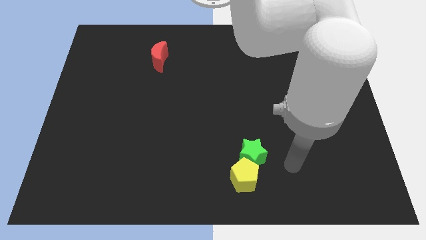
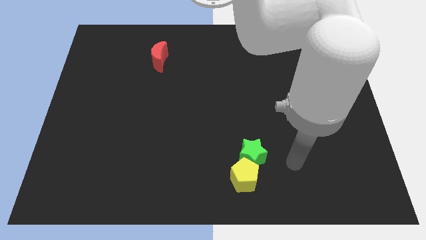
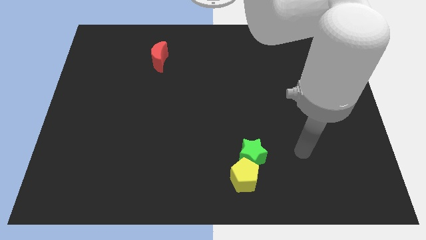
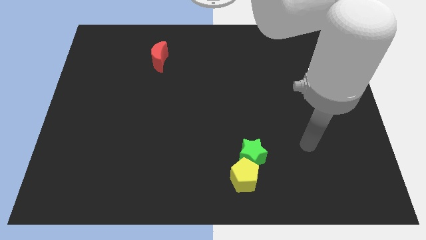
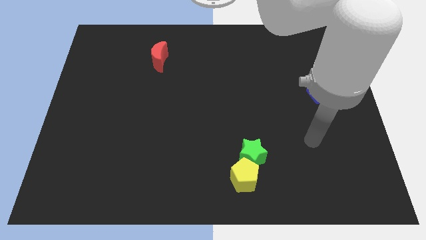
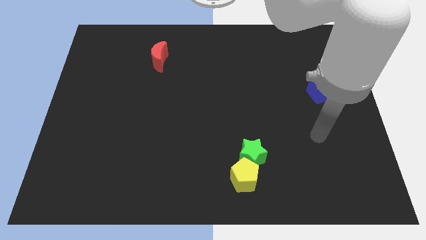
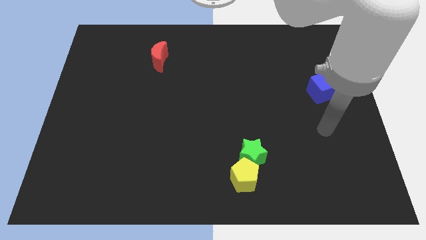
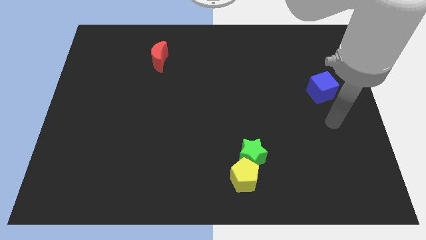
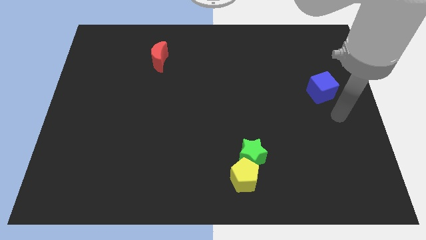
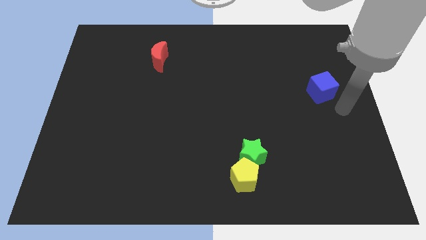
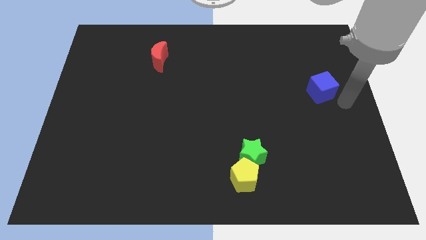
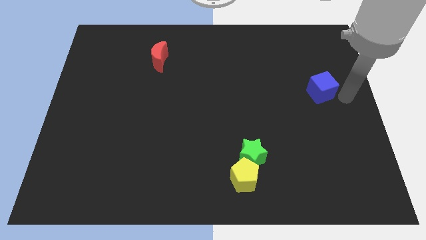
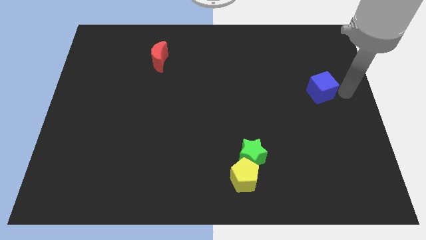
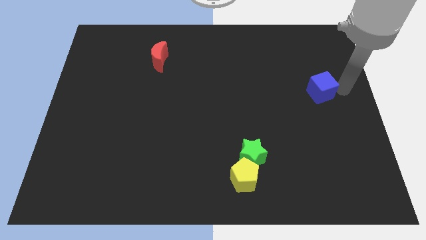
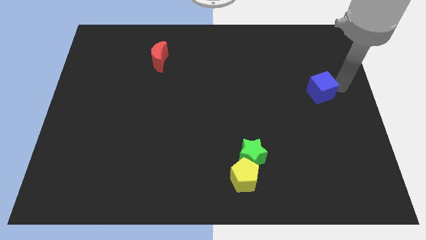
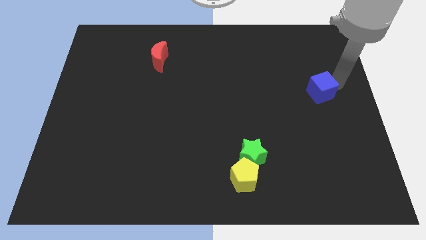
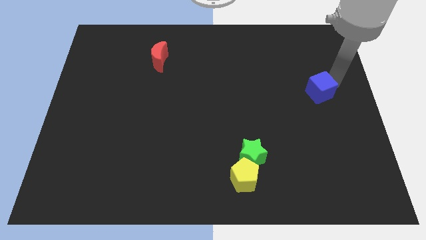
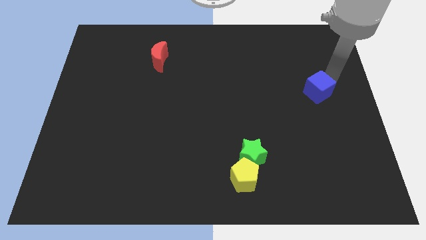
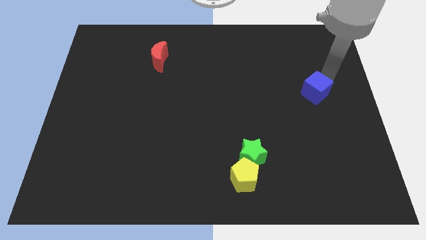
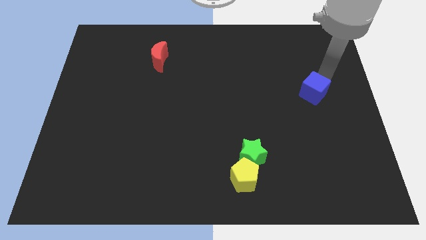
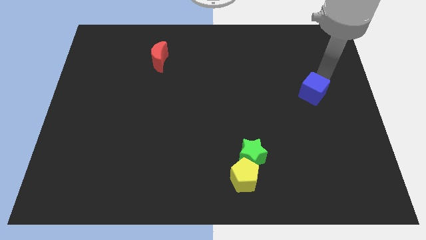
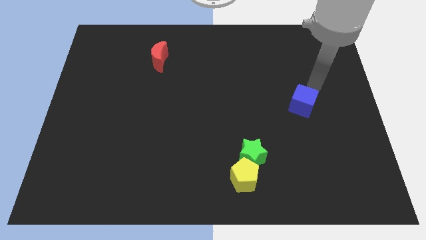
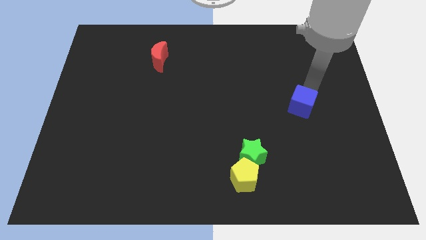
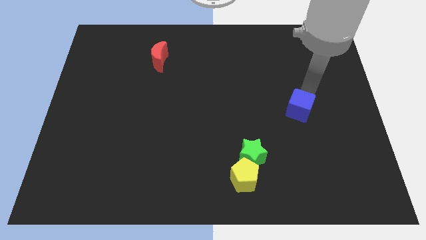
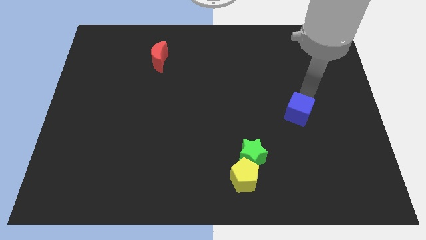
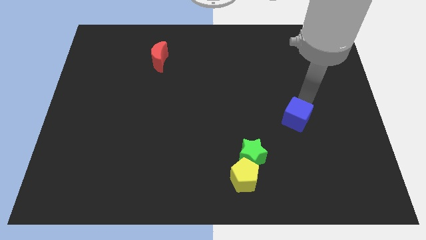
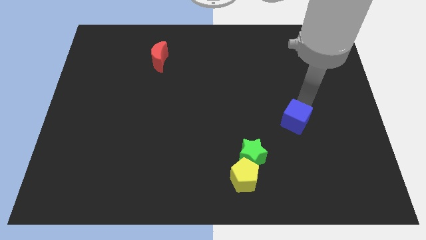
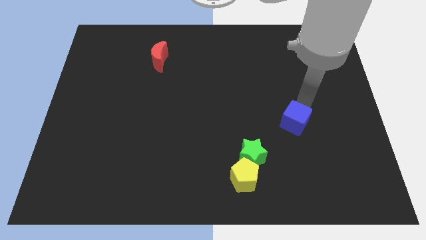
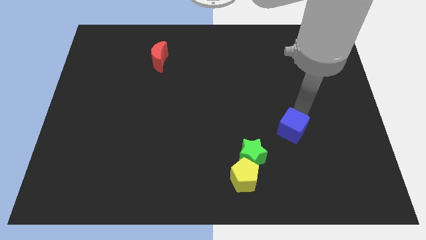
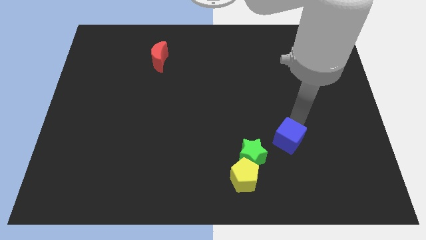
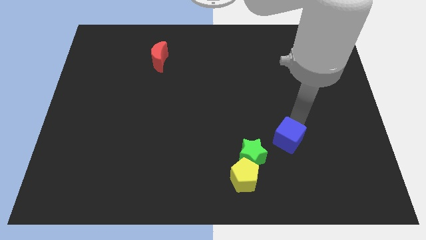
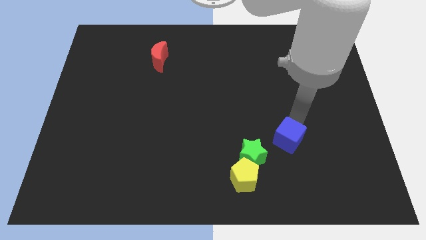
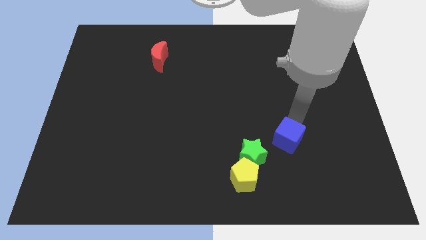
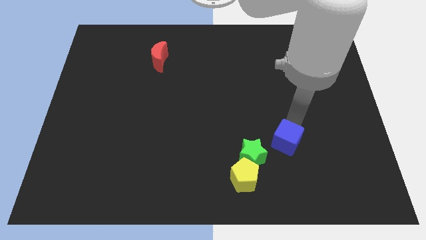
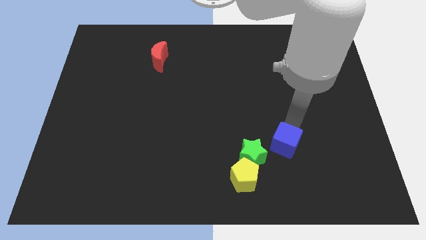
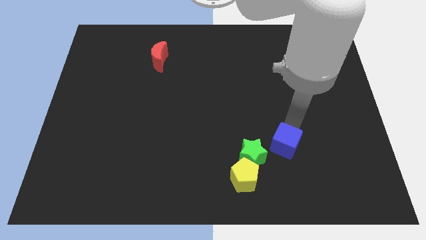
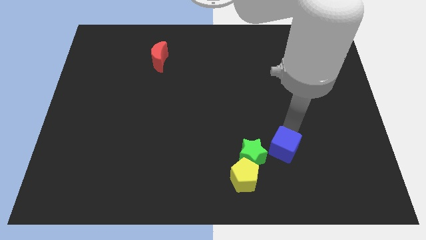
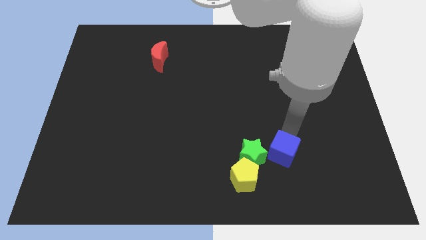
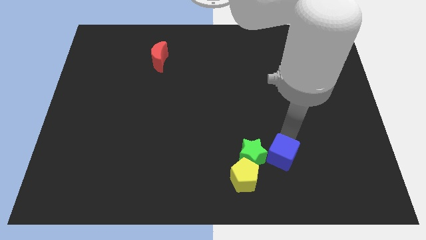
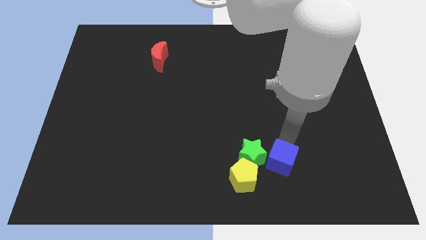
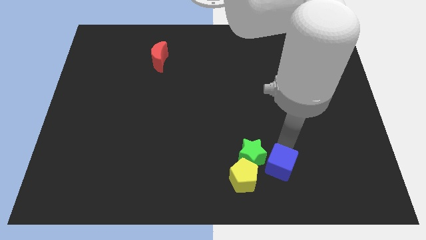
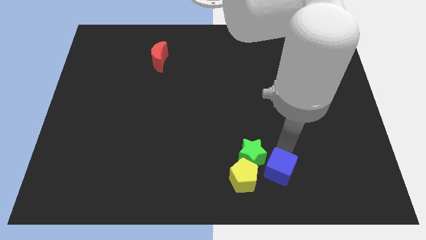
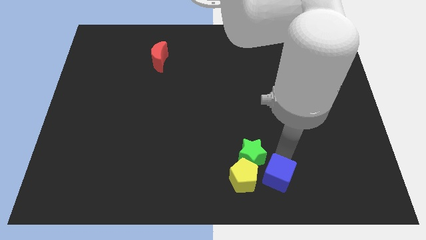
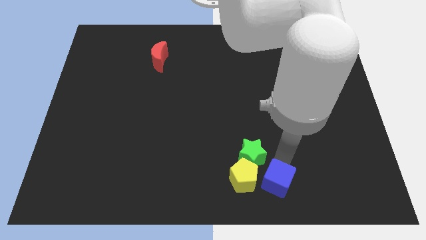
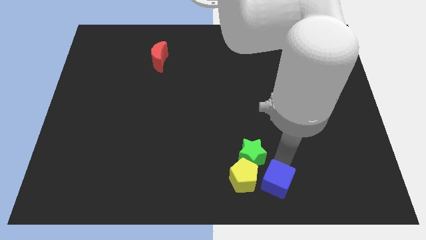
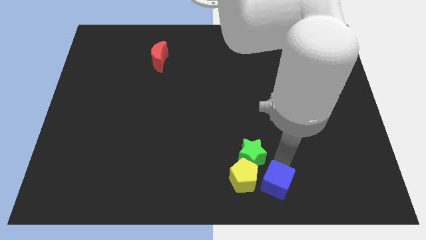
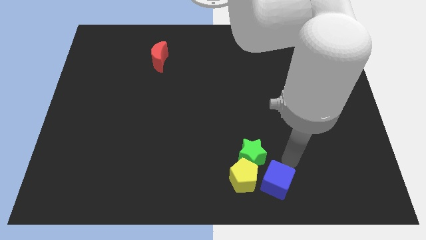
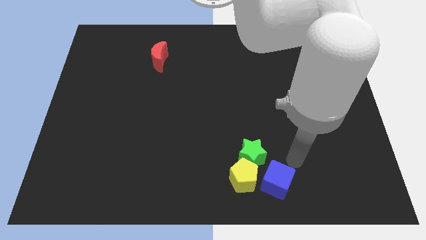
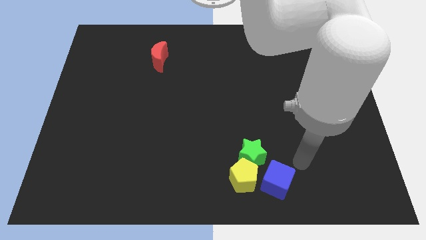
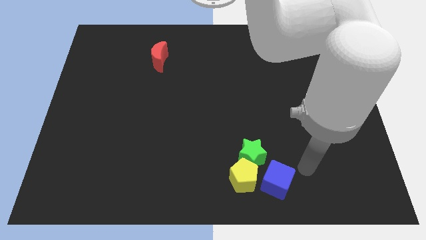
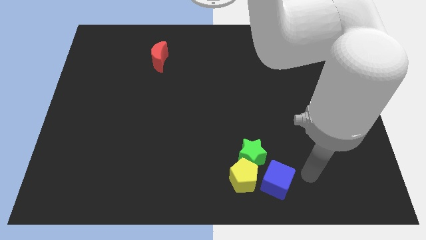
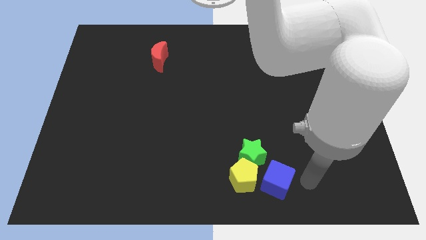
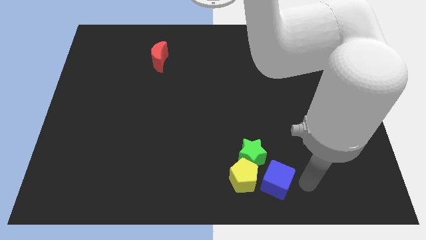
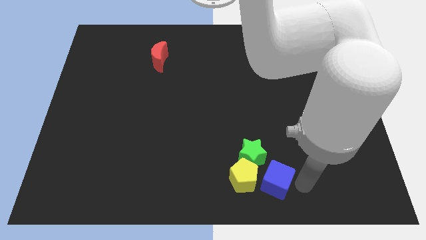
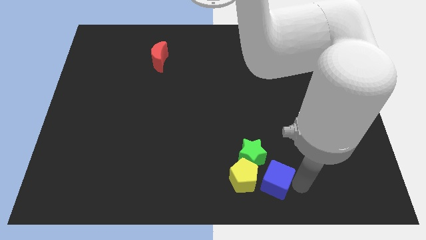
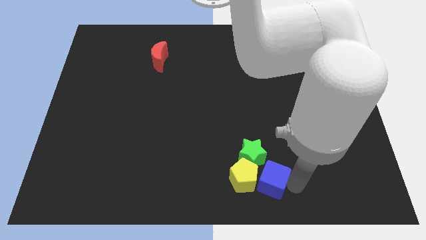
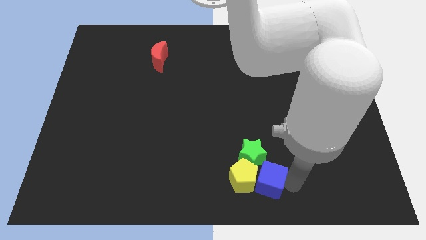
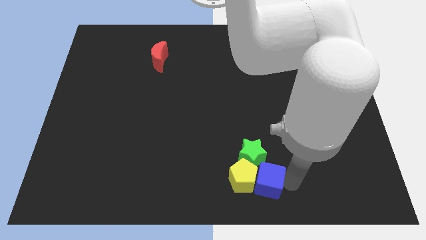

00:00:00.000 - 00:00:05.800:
put the blue block to the yellow pentagon

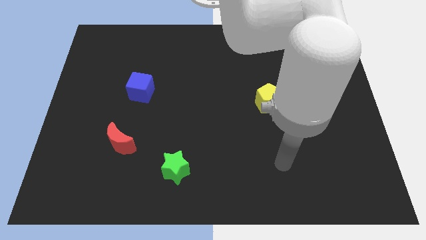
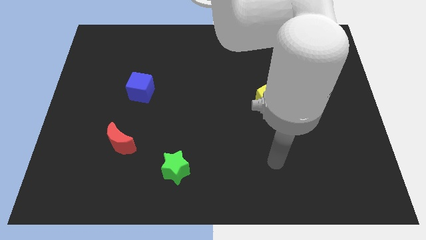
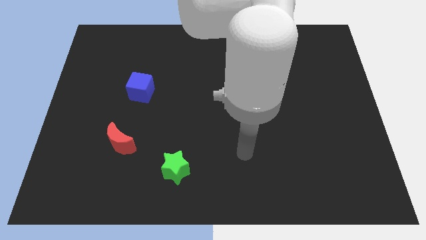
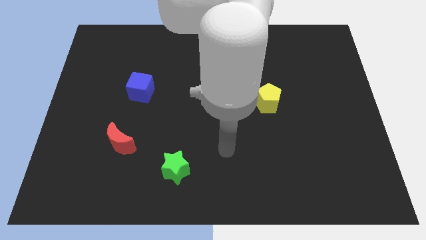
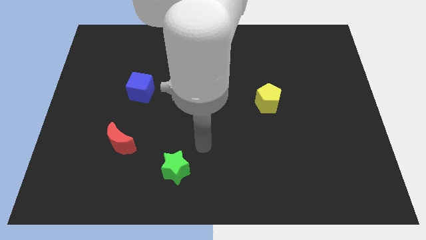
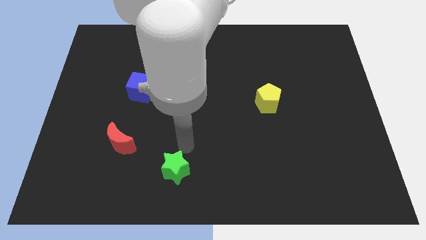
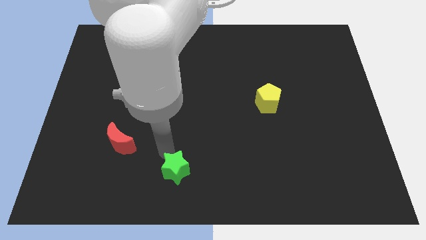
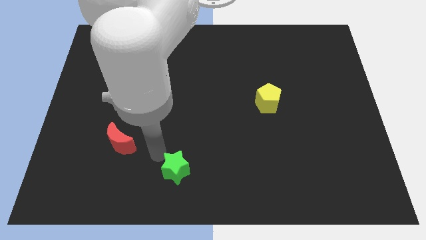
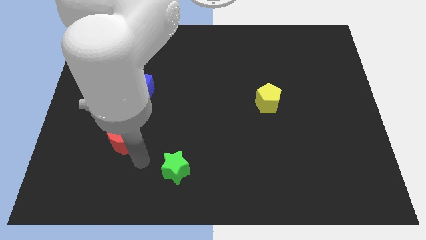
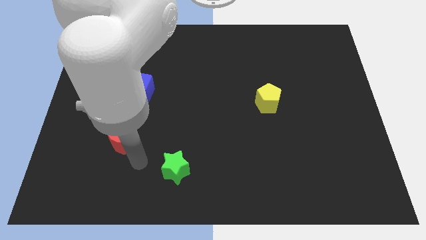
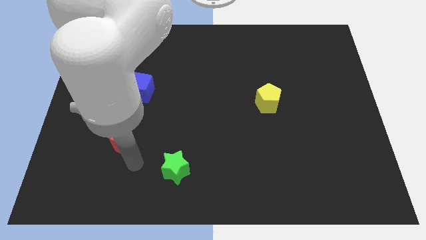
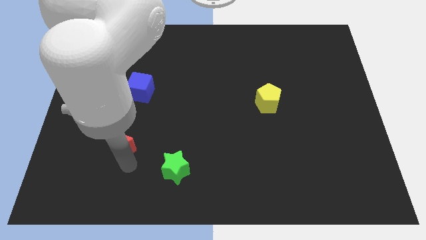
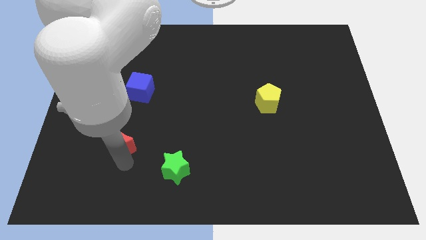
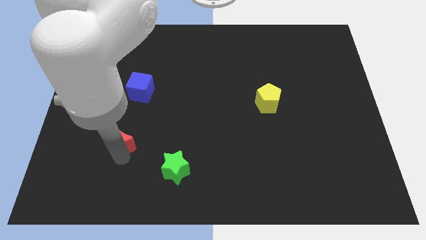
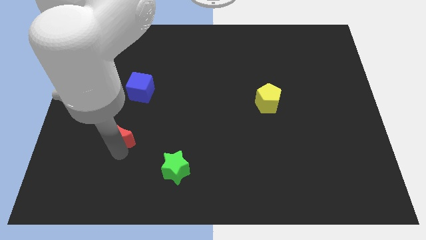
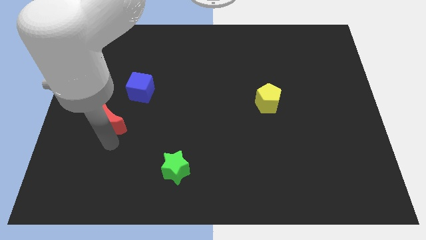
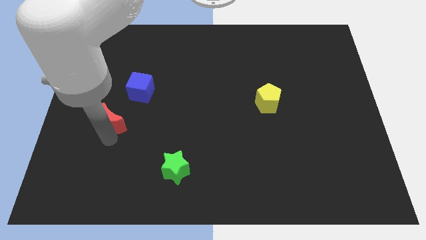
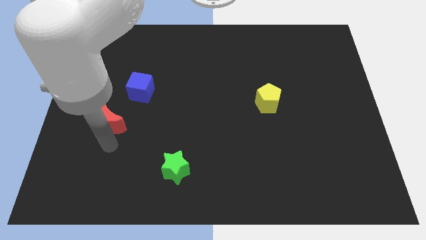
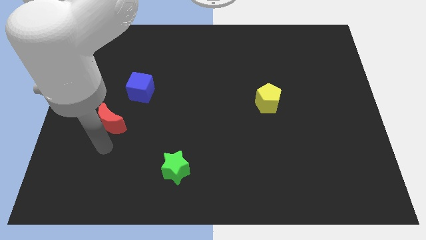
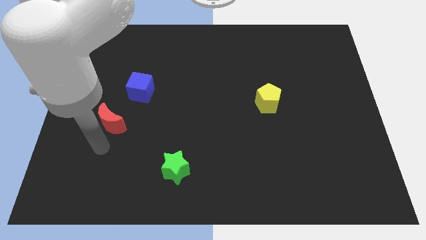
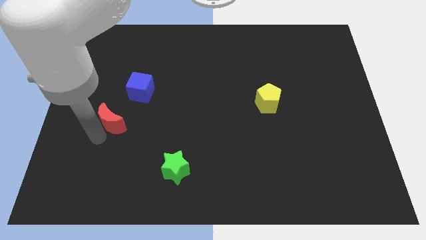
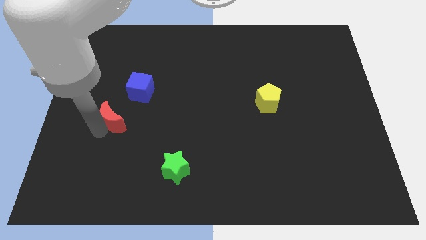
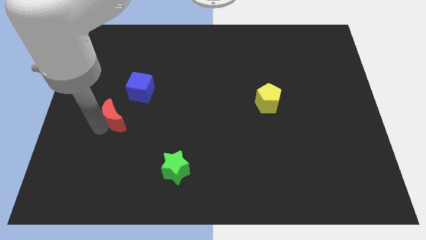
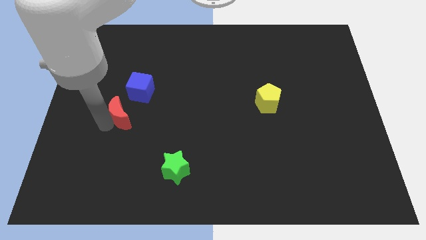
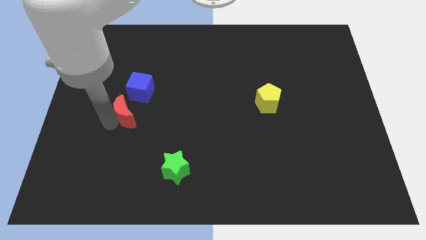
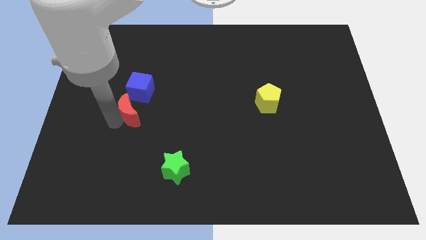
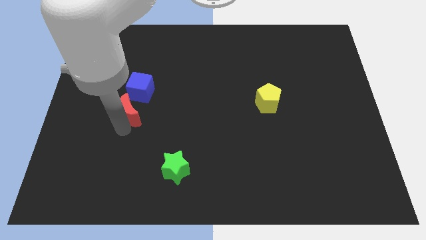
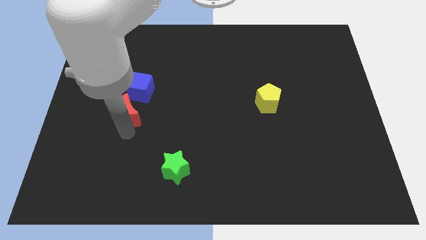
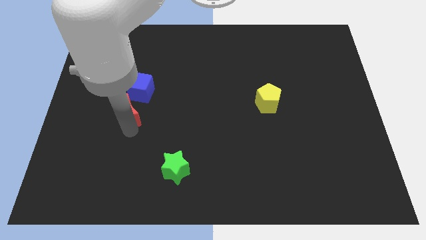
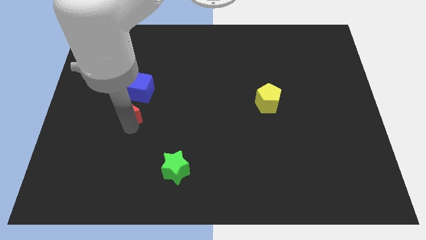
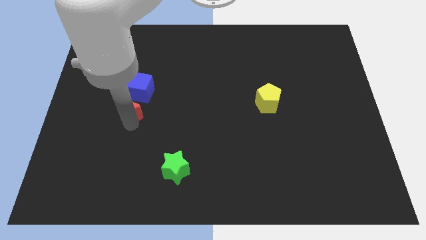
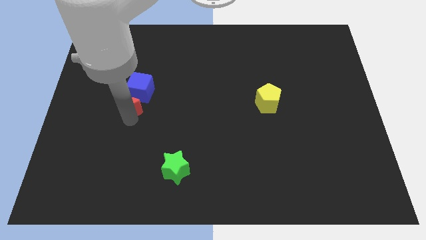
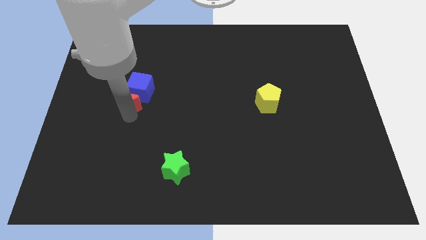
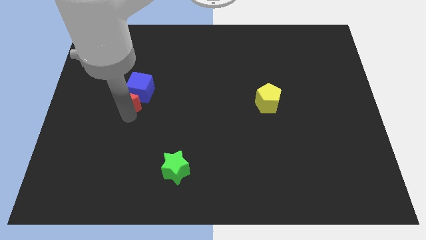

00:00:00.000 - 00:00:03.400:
push the red block towards the blue cube
